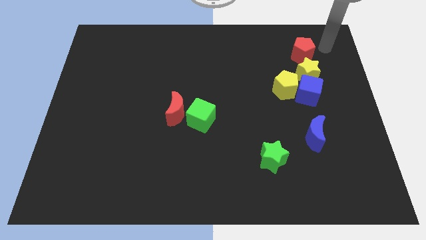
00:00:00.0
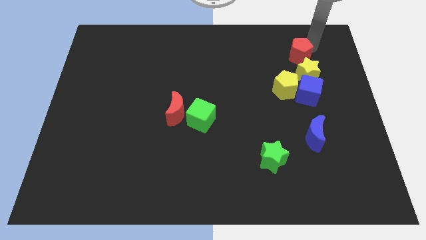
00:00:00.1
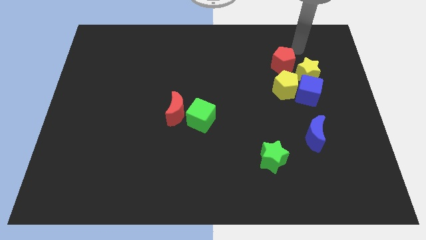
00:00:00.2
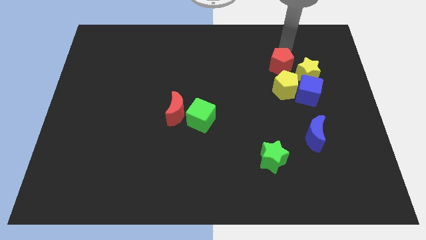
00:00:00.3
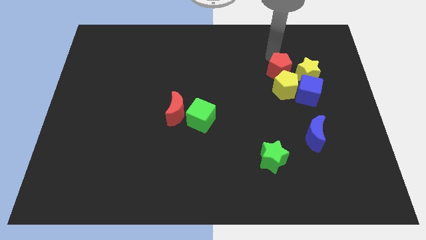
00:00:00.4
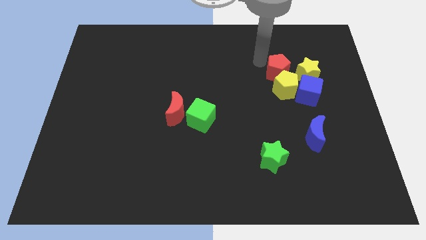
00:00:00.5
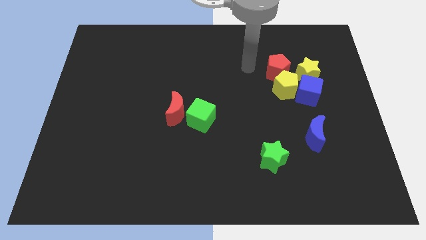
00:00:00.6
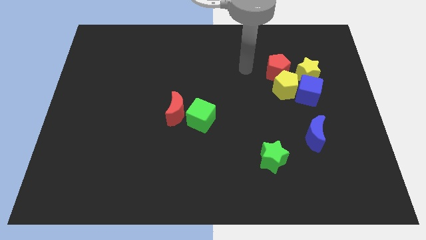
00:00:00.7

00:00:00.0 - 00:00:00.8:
place the red pentagon above the yellow pentagon

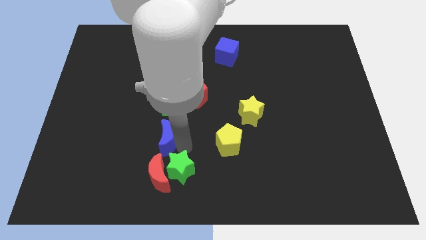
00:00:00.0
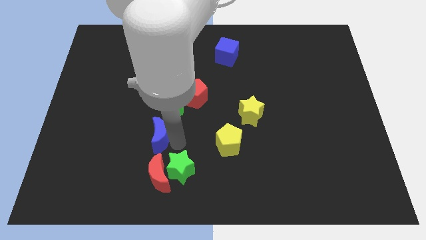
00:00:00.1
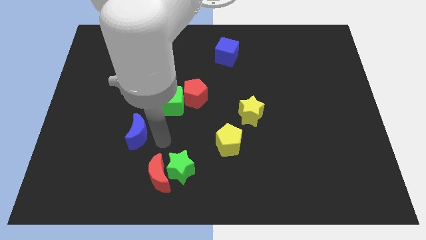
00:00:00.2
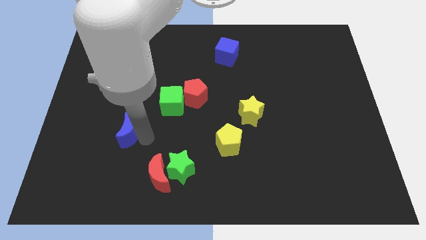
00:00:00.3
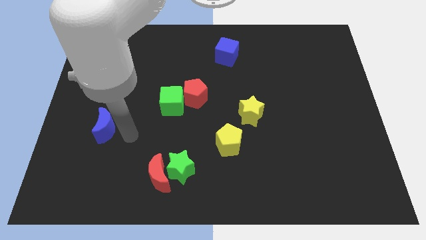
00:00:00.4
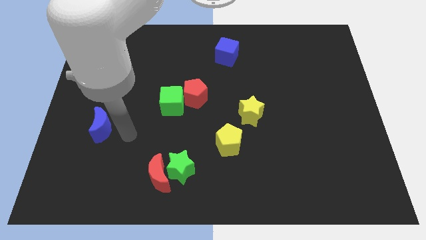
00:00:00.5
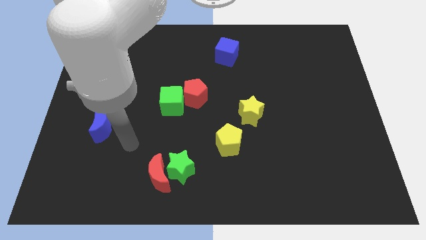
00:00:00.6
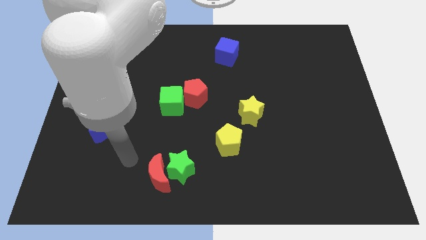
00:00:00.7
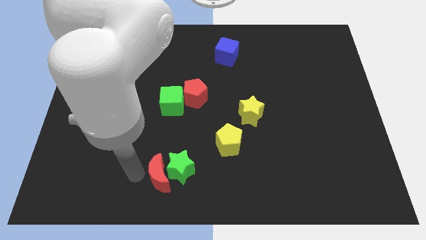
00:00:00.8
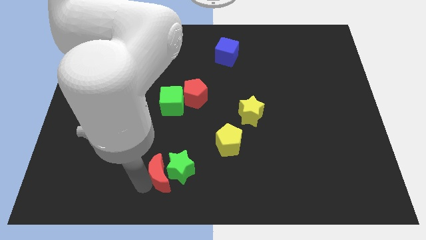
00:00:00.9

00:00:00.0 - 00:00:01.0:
place the blue moon diagonally to red moon

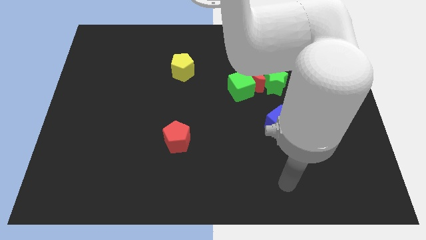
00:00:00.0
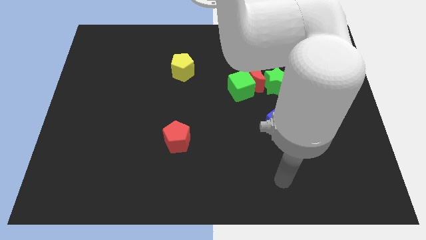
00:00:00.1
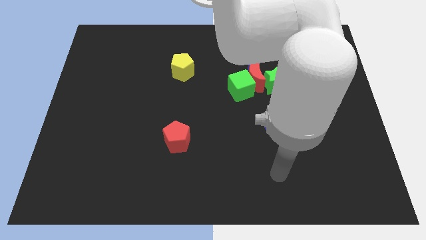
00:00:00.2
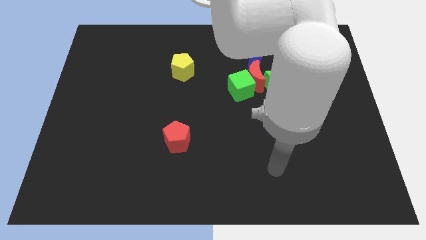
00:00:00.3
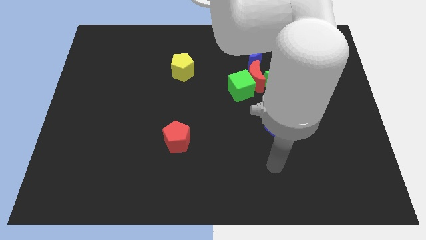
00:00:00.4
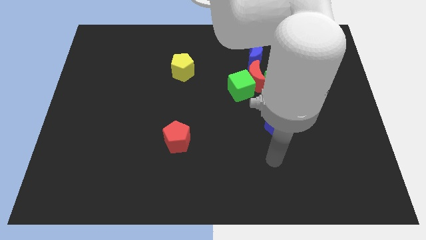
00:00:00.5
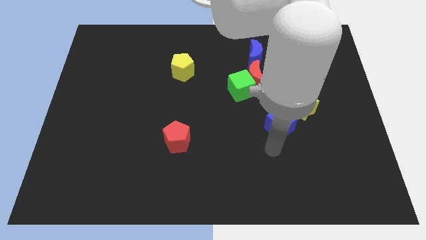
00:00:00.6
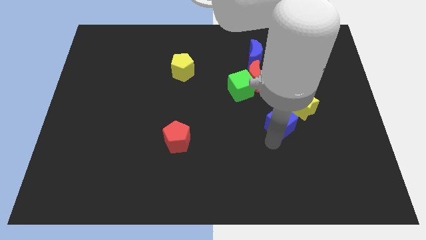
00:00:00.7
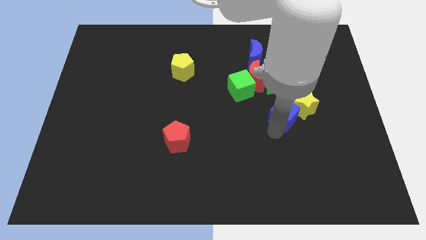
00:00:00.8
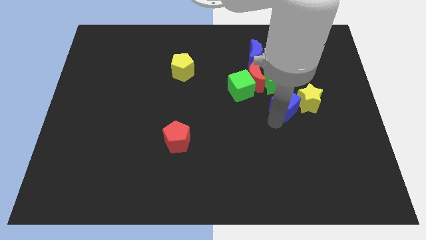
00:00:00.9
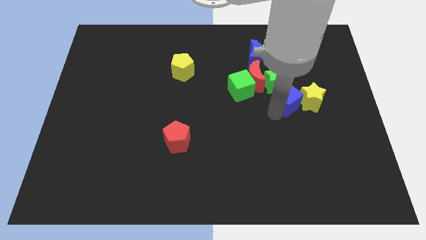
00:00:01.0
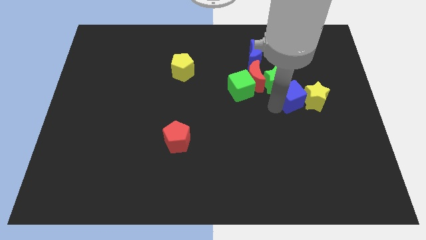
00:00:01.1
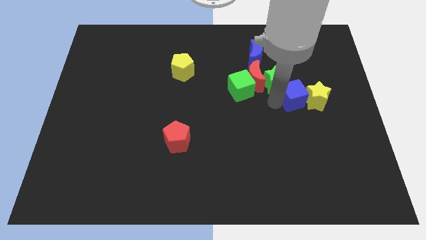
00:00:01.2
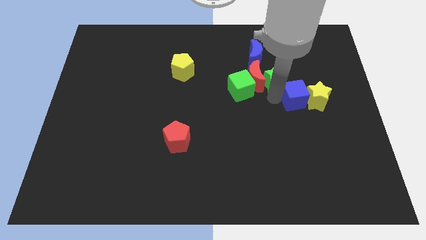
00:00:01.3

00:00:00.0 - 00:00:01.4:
push the blue cube along with yellow star to the right

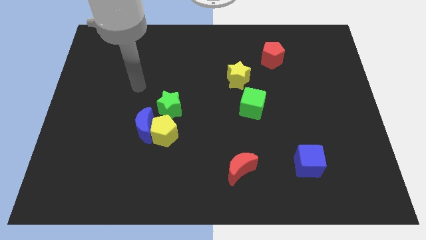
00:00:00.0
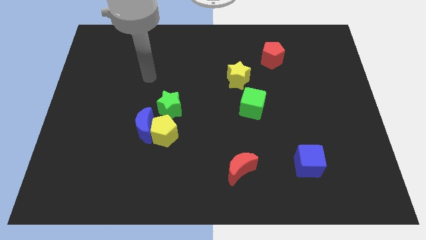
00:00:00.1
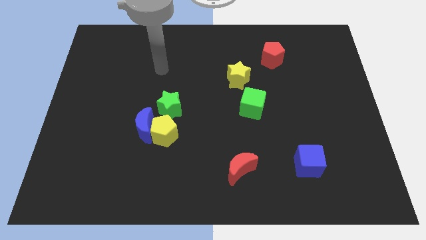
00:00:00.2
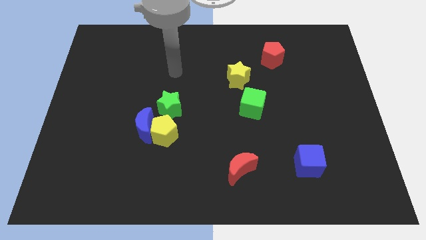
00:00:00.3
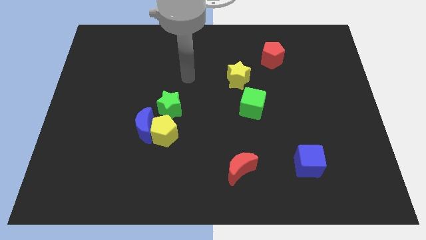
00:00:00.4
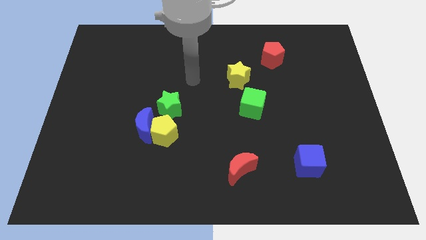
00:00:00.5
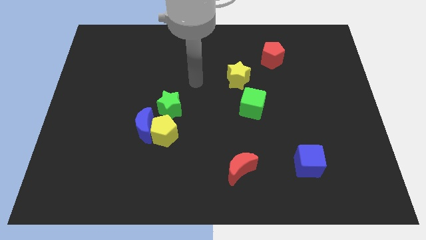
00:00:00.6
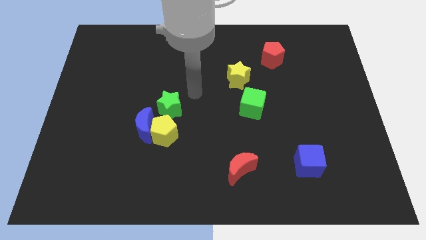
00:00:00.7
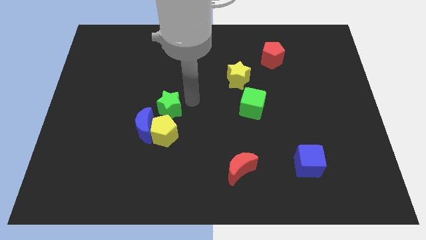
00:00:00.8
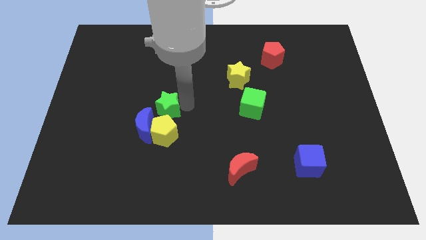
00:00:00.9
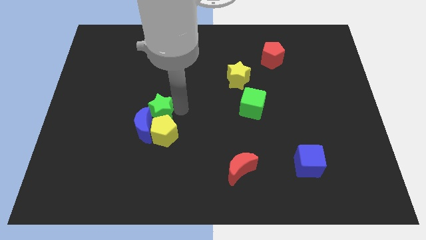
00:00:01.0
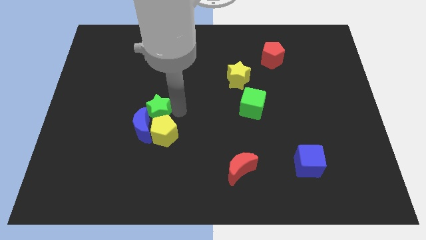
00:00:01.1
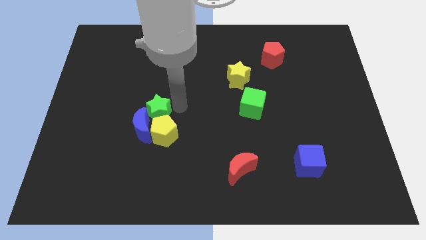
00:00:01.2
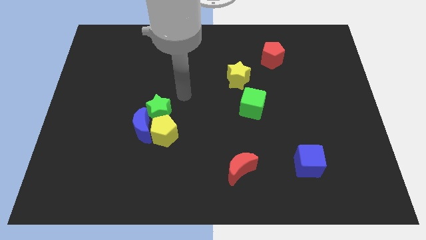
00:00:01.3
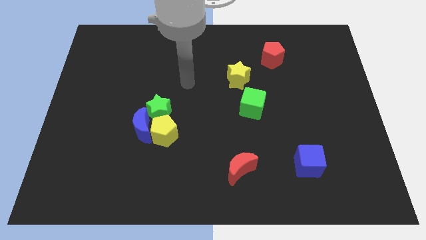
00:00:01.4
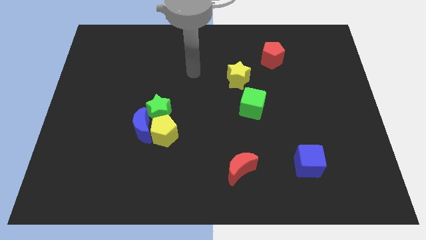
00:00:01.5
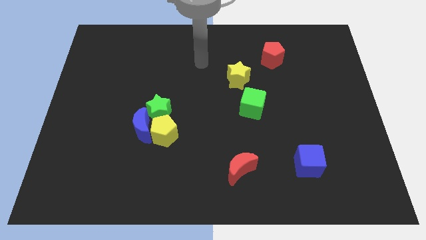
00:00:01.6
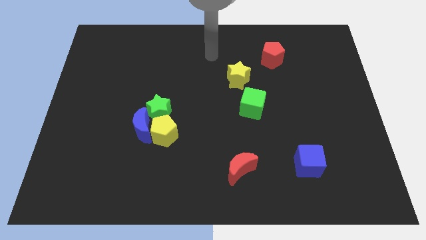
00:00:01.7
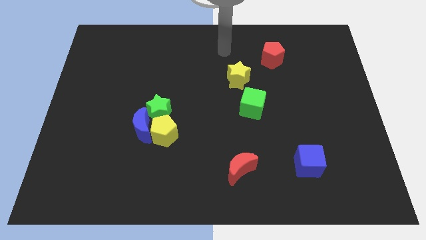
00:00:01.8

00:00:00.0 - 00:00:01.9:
move the green star into the blue moon

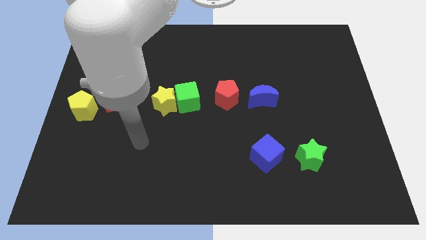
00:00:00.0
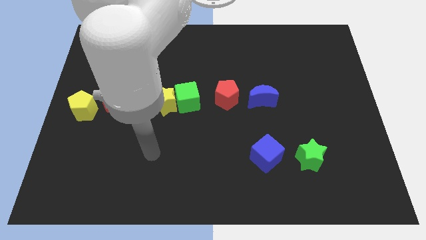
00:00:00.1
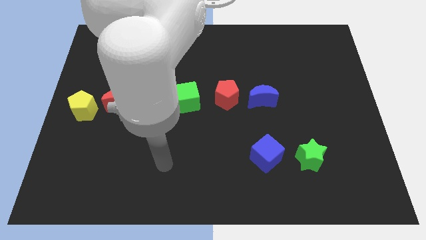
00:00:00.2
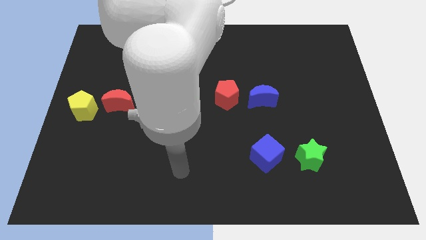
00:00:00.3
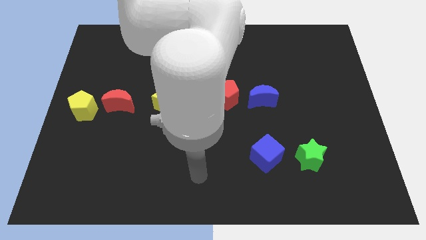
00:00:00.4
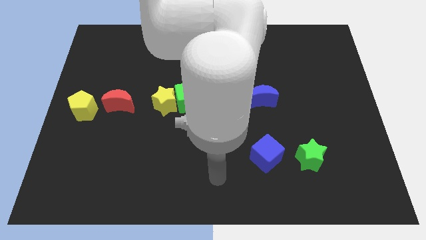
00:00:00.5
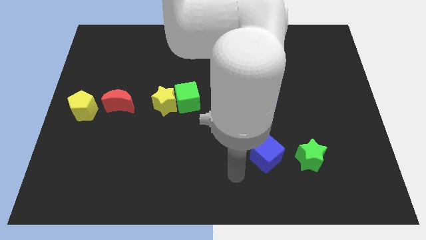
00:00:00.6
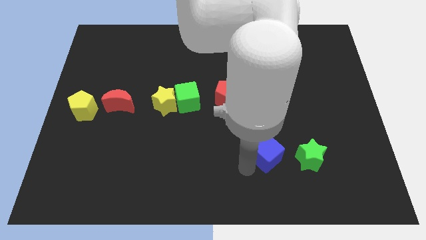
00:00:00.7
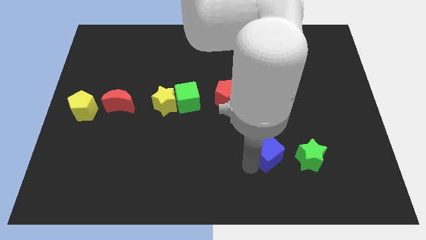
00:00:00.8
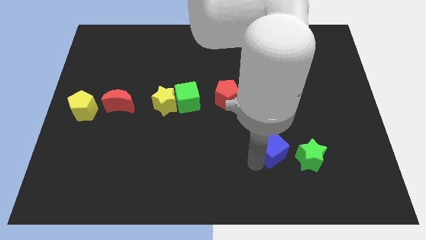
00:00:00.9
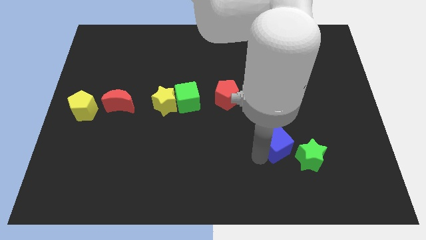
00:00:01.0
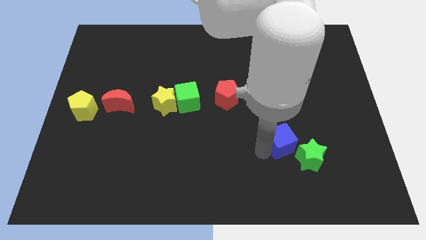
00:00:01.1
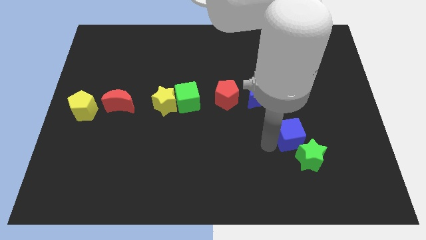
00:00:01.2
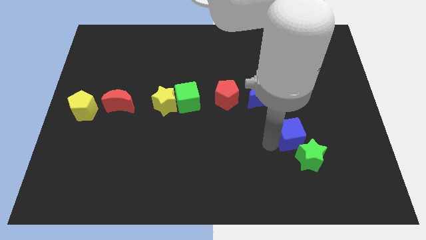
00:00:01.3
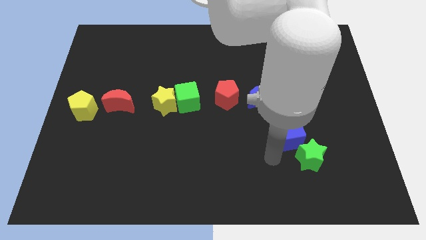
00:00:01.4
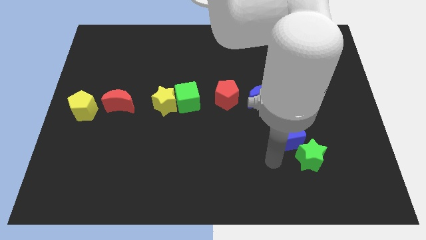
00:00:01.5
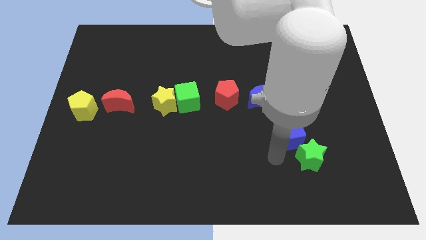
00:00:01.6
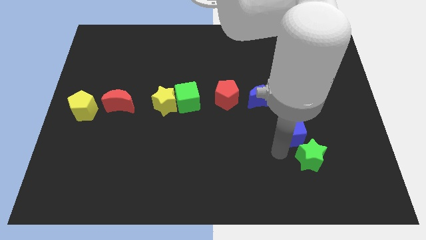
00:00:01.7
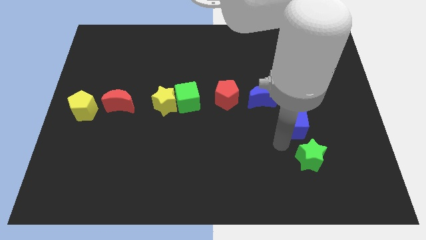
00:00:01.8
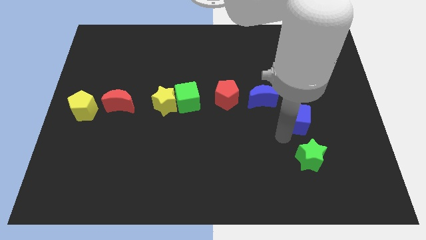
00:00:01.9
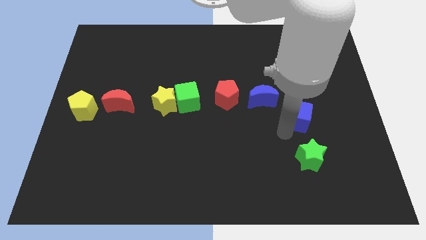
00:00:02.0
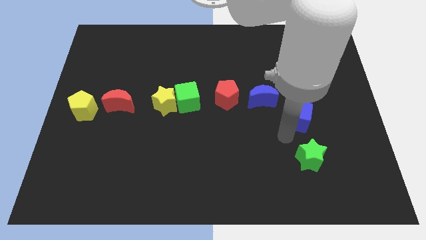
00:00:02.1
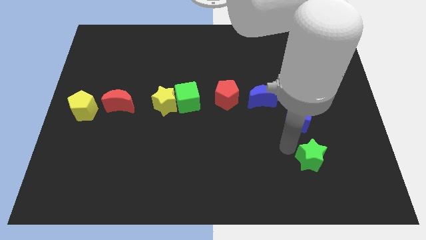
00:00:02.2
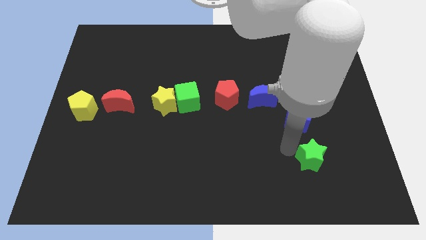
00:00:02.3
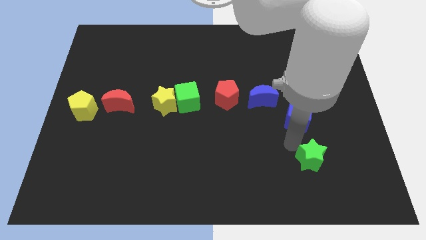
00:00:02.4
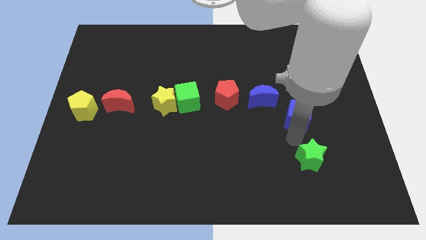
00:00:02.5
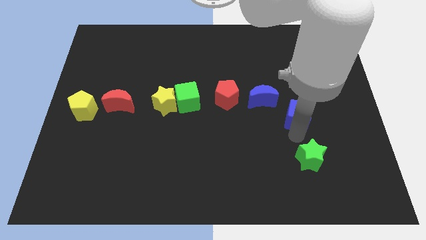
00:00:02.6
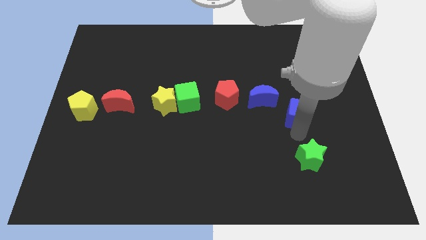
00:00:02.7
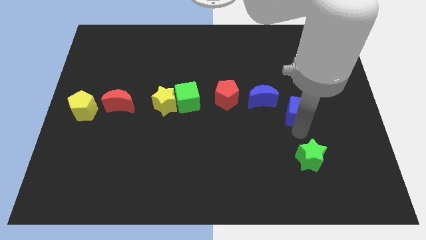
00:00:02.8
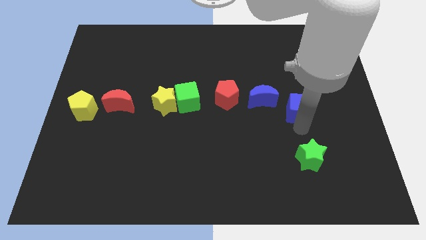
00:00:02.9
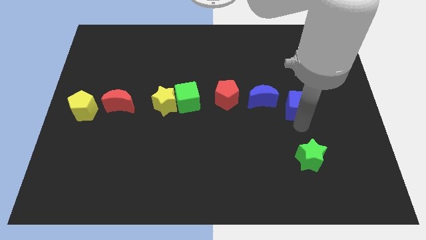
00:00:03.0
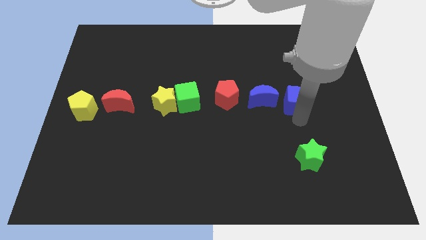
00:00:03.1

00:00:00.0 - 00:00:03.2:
move the blue cube above the green star

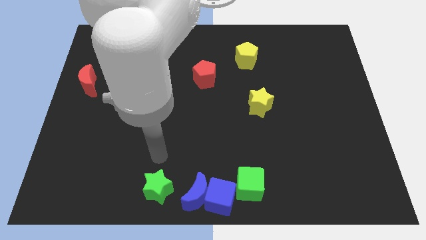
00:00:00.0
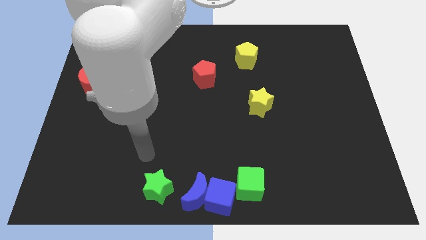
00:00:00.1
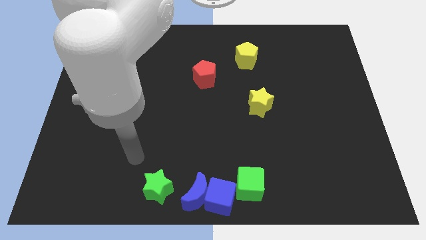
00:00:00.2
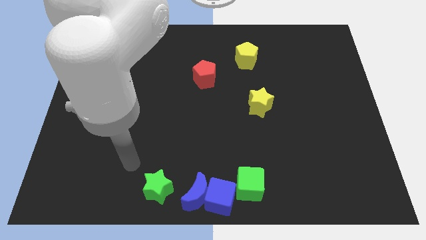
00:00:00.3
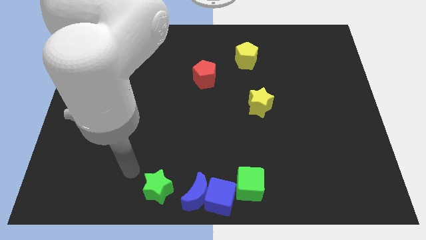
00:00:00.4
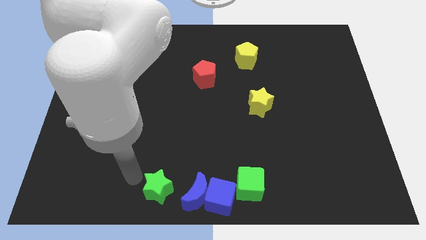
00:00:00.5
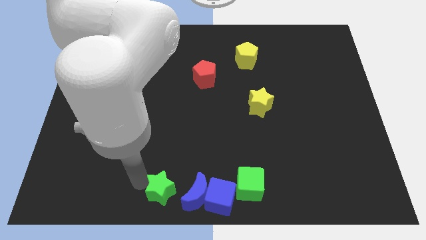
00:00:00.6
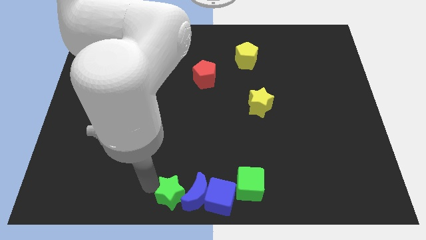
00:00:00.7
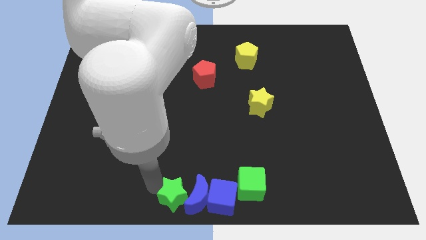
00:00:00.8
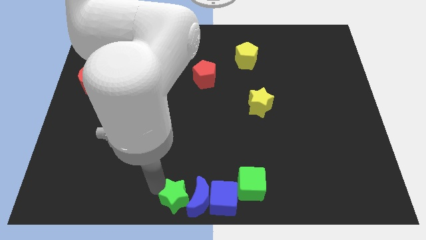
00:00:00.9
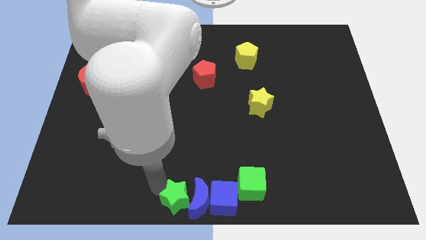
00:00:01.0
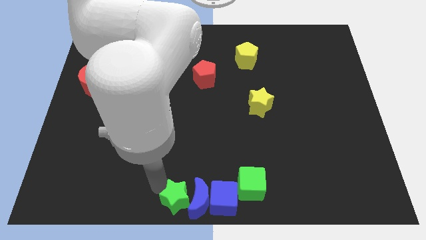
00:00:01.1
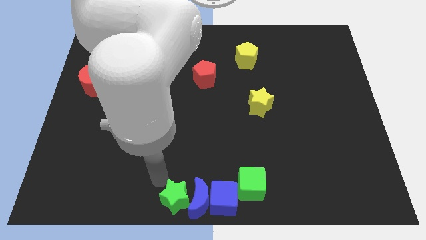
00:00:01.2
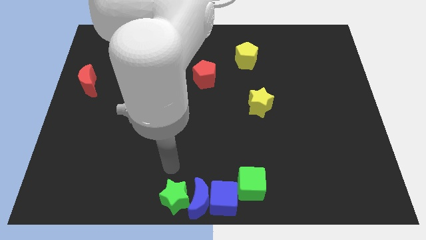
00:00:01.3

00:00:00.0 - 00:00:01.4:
push the green star into the blue crescent
